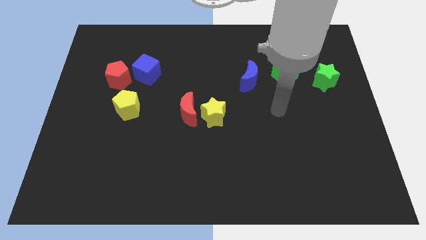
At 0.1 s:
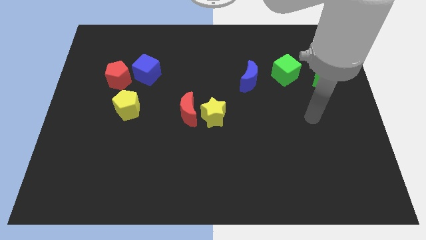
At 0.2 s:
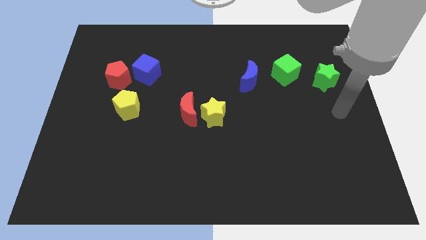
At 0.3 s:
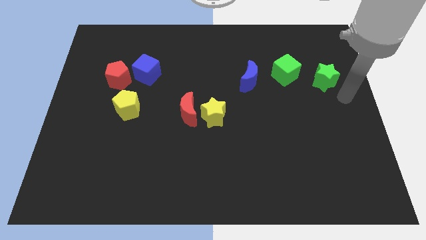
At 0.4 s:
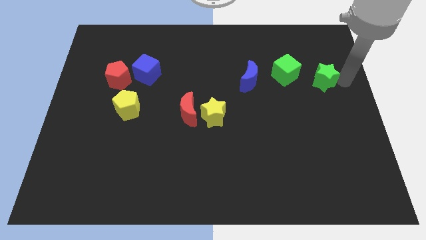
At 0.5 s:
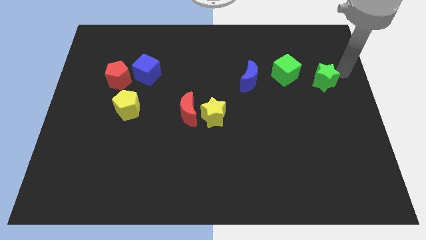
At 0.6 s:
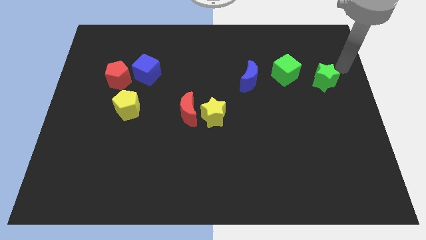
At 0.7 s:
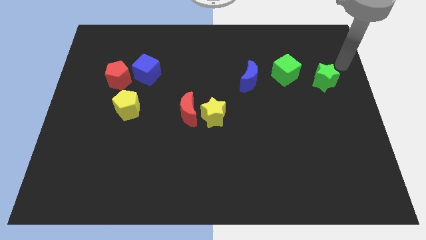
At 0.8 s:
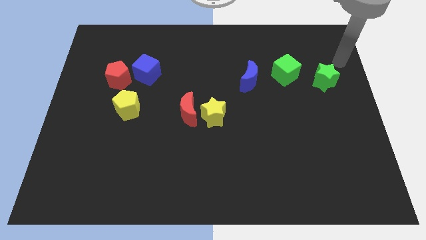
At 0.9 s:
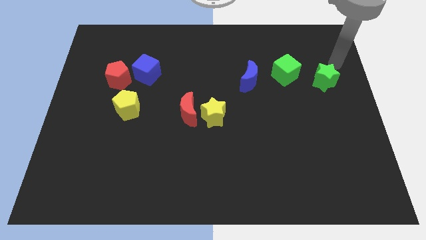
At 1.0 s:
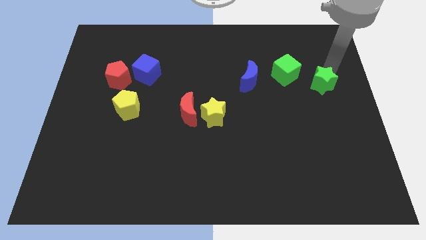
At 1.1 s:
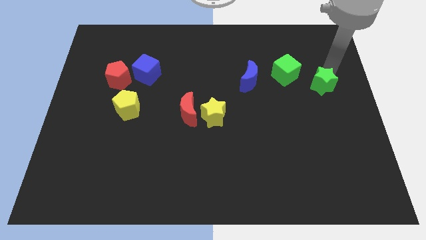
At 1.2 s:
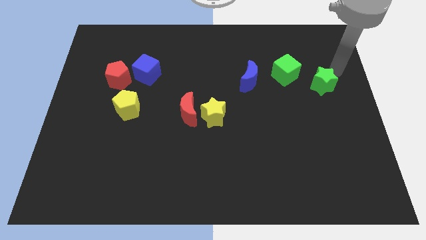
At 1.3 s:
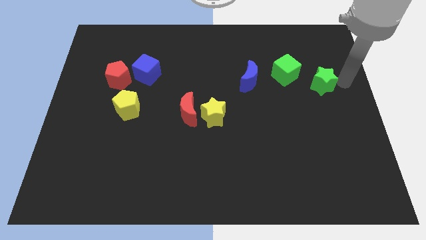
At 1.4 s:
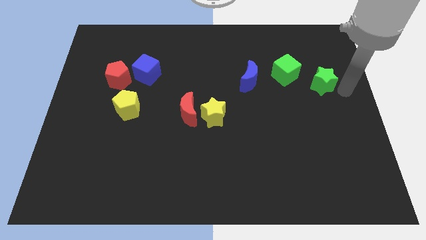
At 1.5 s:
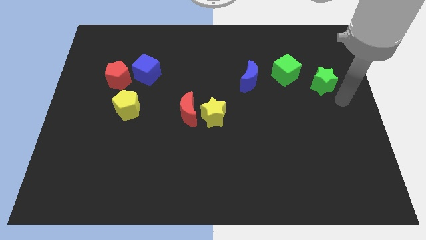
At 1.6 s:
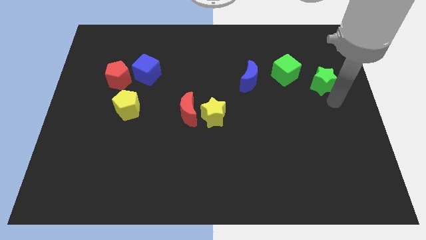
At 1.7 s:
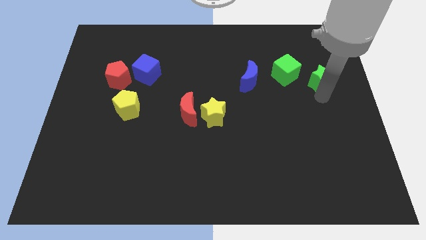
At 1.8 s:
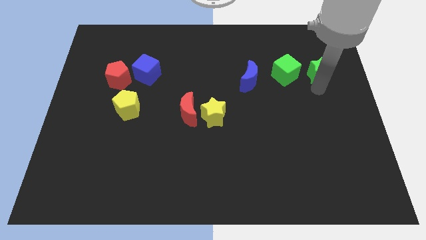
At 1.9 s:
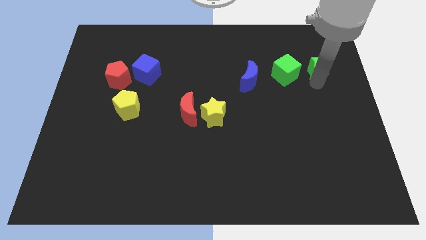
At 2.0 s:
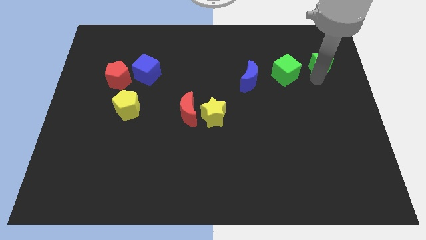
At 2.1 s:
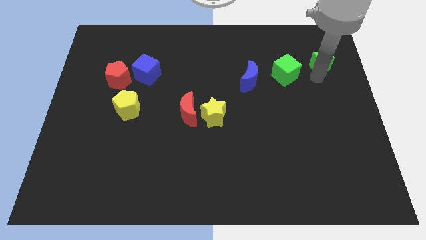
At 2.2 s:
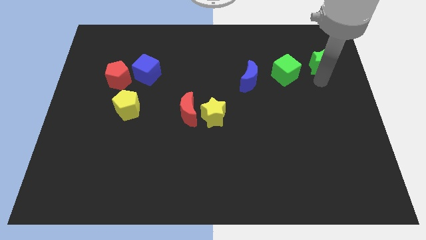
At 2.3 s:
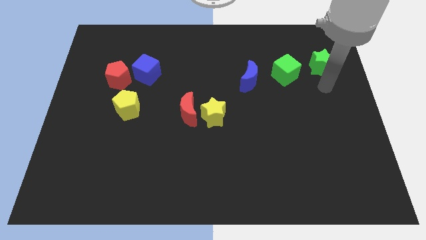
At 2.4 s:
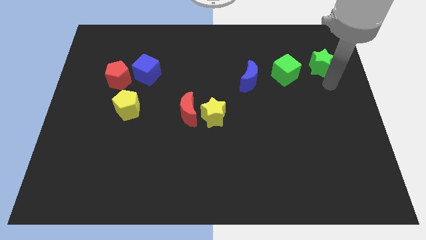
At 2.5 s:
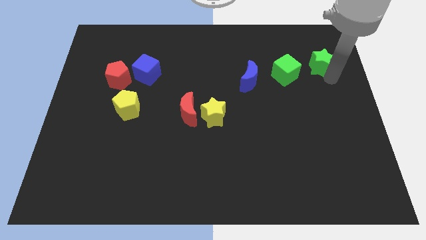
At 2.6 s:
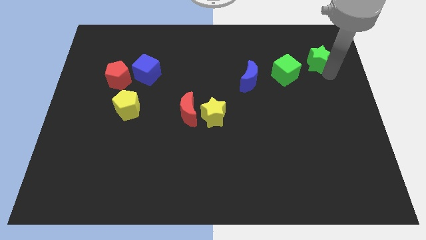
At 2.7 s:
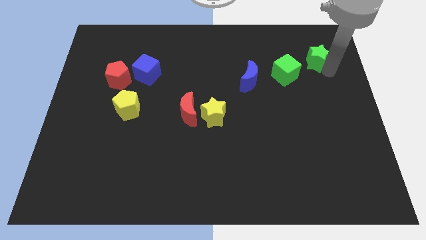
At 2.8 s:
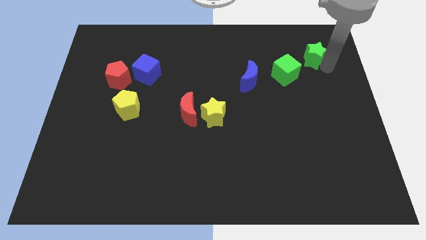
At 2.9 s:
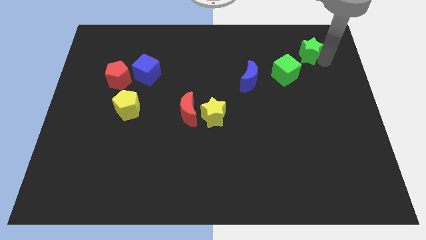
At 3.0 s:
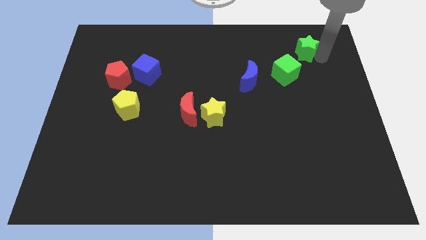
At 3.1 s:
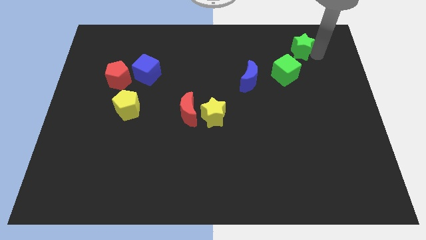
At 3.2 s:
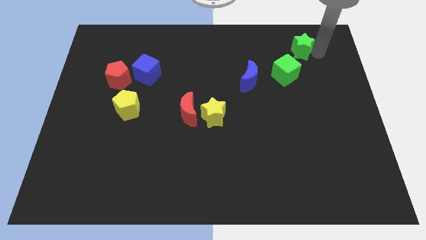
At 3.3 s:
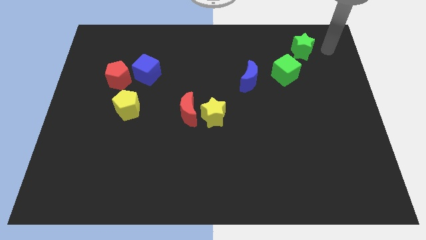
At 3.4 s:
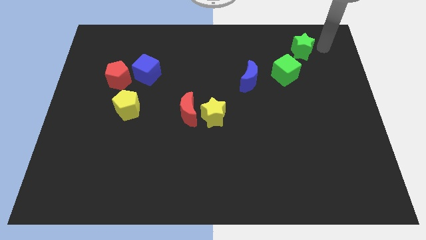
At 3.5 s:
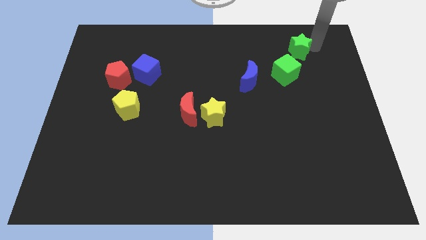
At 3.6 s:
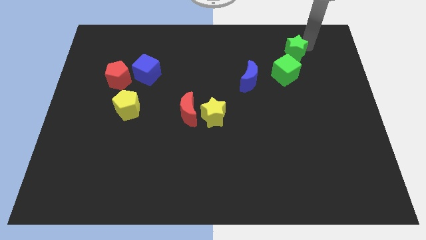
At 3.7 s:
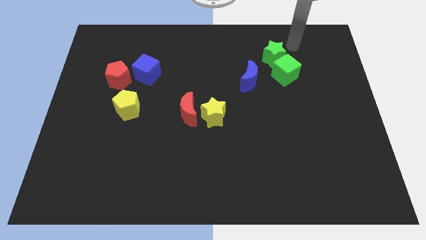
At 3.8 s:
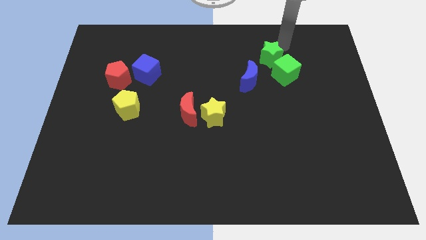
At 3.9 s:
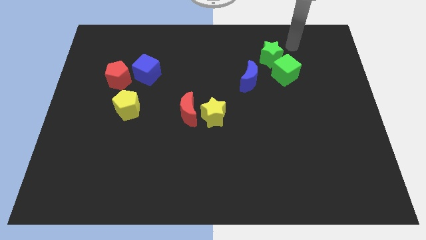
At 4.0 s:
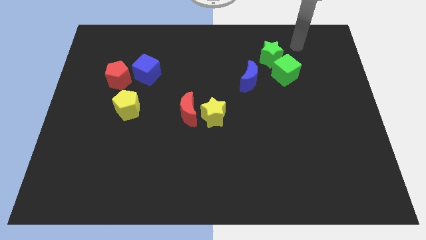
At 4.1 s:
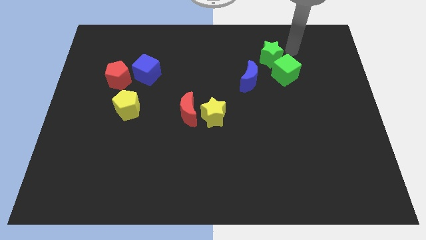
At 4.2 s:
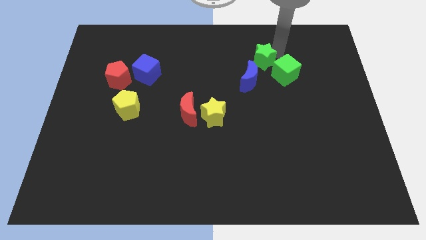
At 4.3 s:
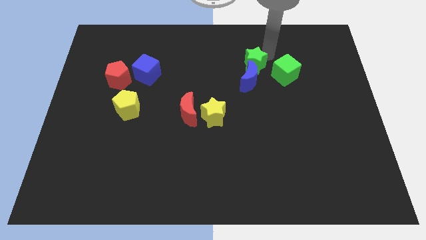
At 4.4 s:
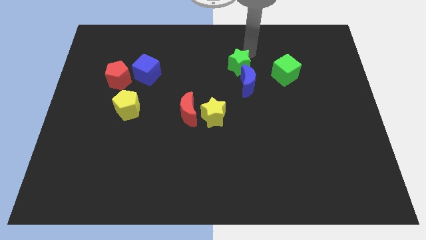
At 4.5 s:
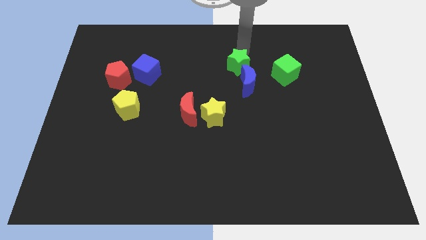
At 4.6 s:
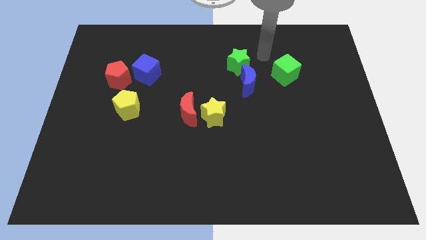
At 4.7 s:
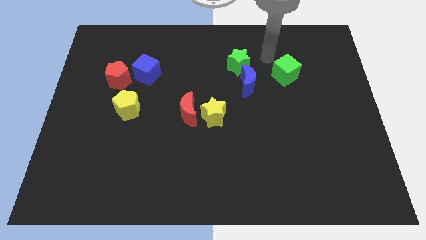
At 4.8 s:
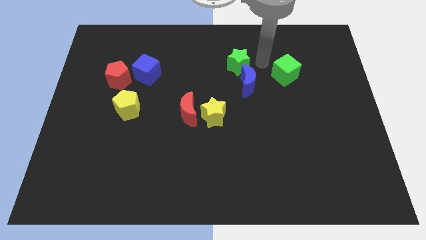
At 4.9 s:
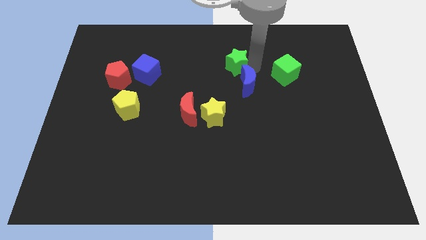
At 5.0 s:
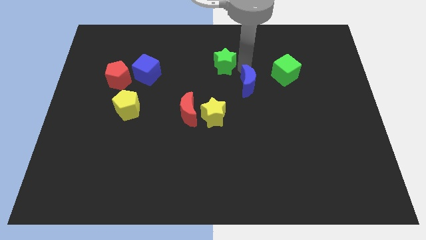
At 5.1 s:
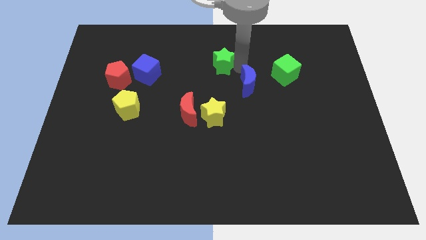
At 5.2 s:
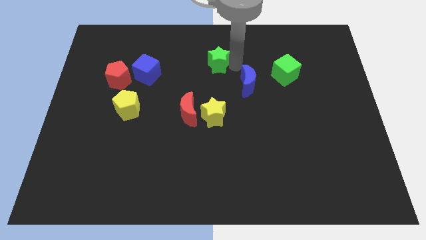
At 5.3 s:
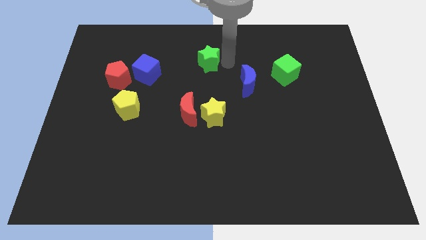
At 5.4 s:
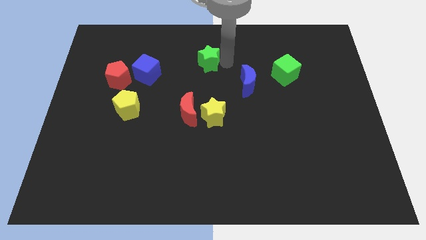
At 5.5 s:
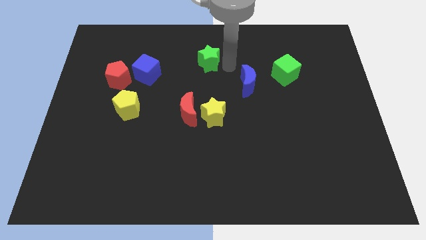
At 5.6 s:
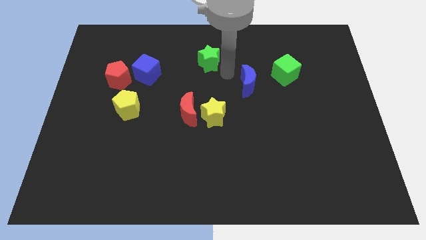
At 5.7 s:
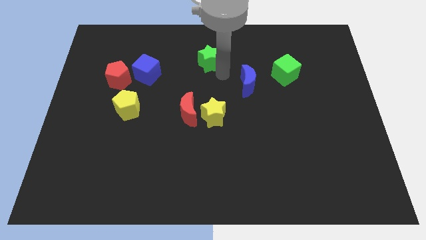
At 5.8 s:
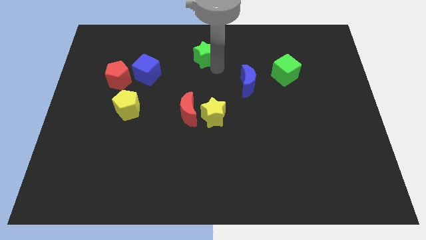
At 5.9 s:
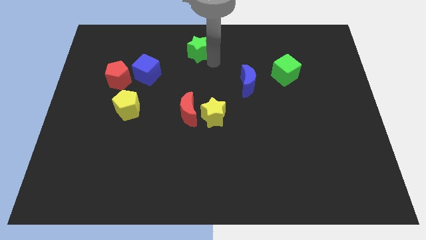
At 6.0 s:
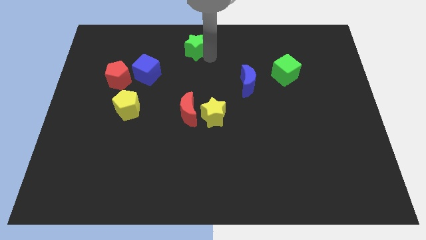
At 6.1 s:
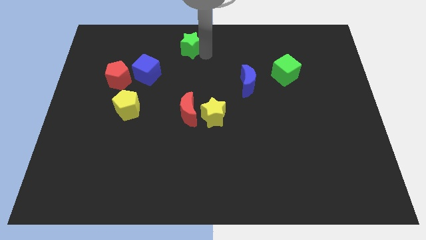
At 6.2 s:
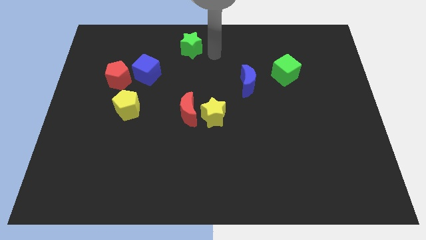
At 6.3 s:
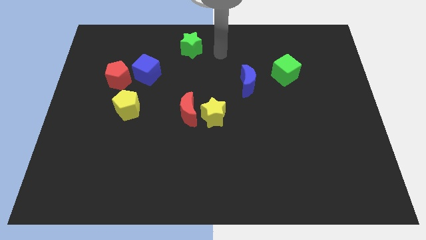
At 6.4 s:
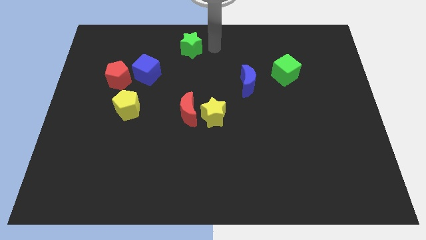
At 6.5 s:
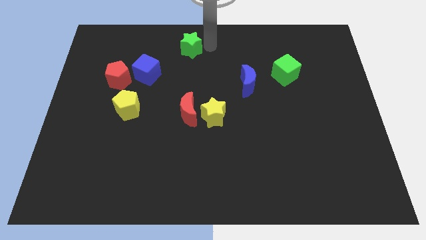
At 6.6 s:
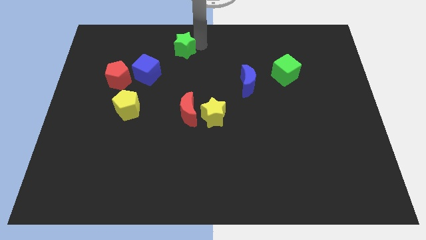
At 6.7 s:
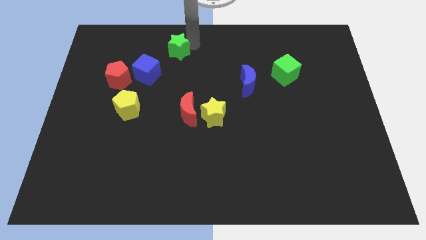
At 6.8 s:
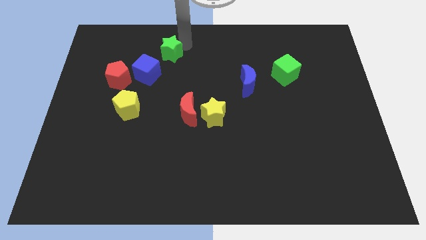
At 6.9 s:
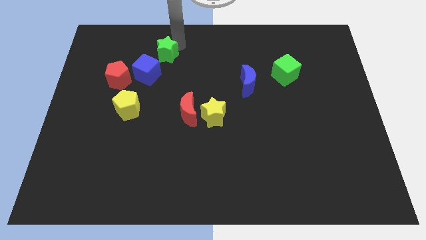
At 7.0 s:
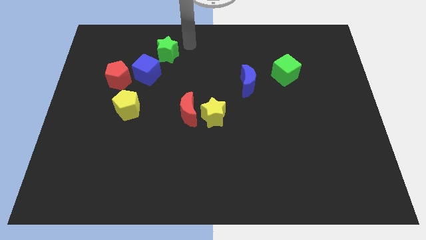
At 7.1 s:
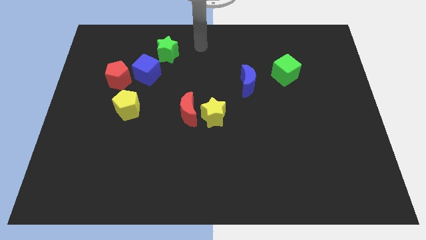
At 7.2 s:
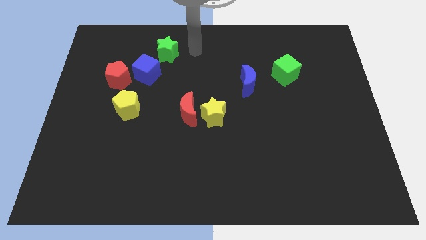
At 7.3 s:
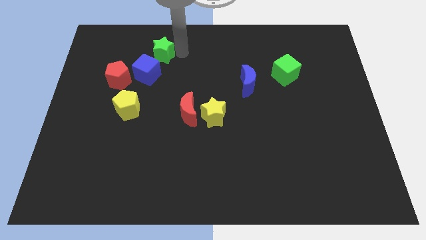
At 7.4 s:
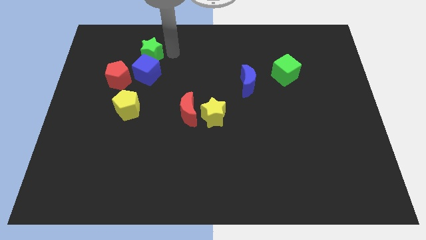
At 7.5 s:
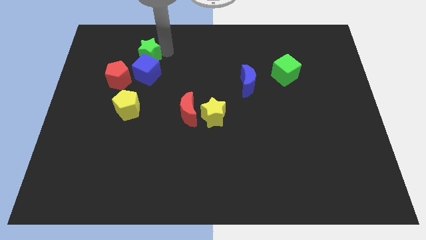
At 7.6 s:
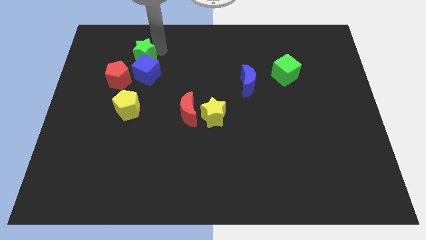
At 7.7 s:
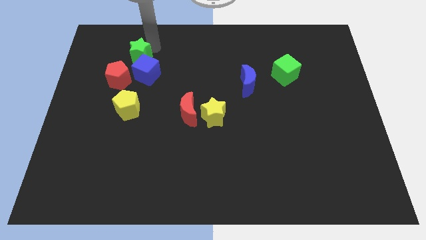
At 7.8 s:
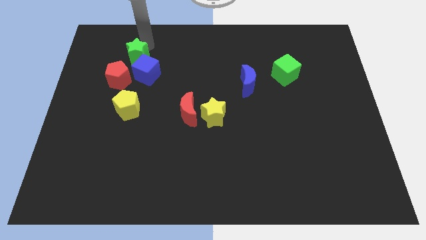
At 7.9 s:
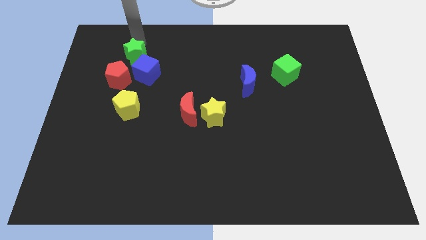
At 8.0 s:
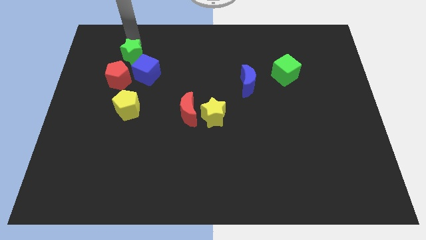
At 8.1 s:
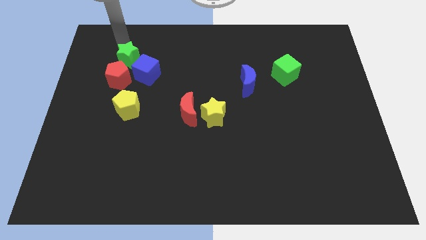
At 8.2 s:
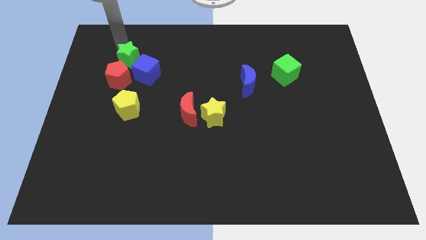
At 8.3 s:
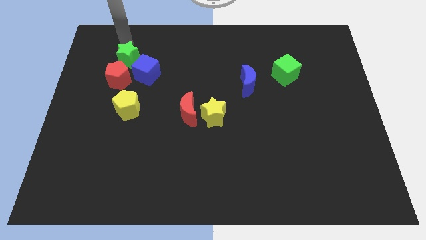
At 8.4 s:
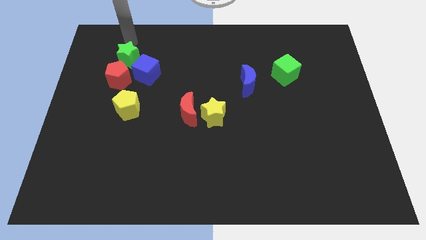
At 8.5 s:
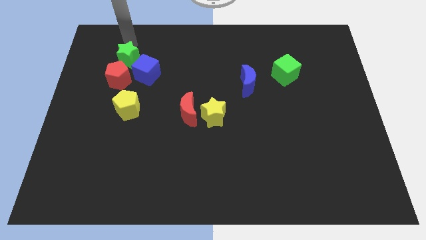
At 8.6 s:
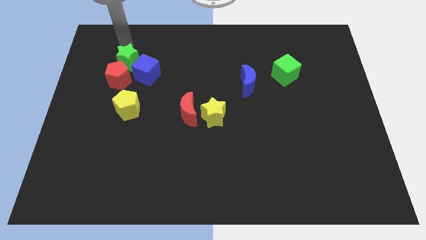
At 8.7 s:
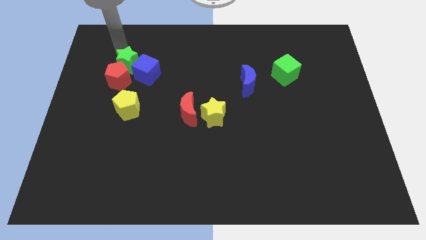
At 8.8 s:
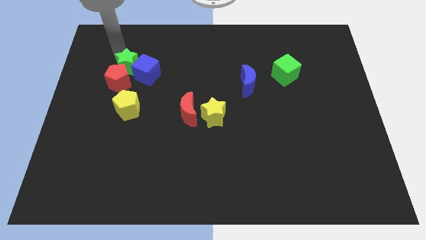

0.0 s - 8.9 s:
push the green star towards the red pentagon
